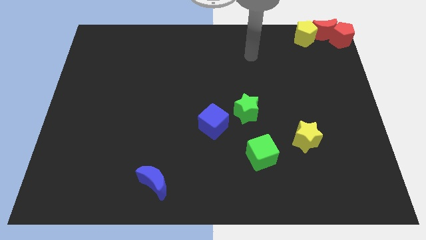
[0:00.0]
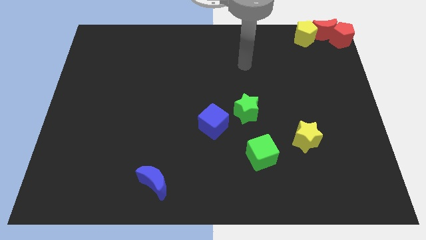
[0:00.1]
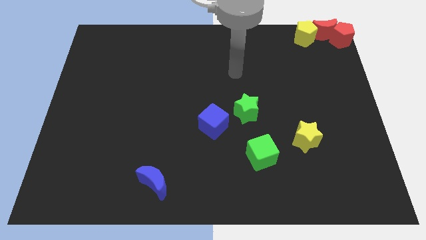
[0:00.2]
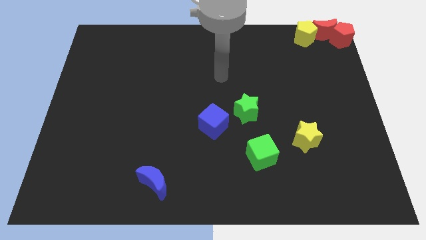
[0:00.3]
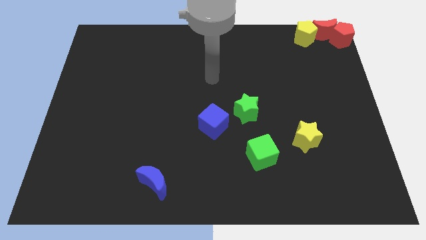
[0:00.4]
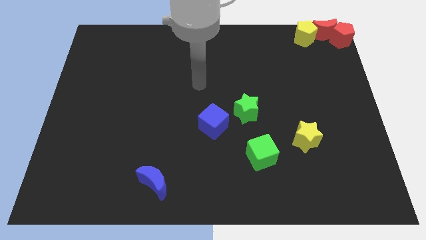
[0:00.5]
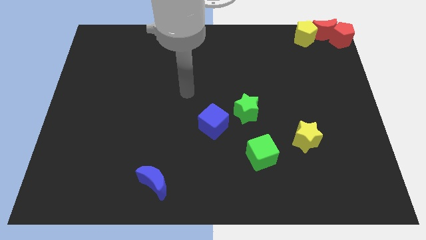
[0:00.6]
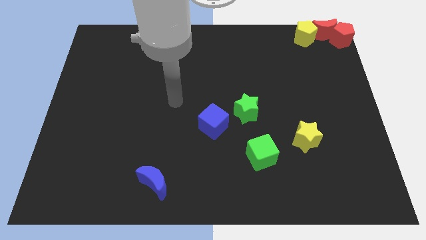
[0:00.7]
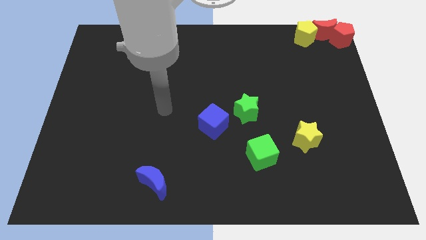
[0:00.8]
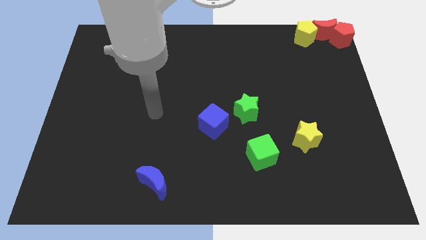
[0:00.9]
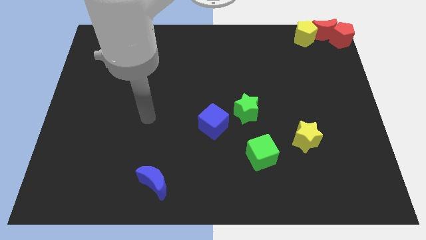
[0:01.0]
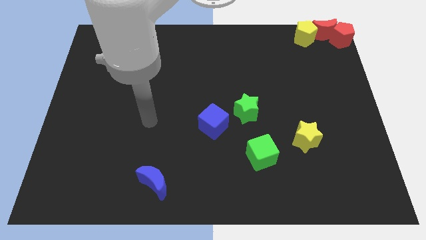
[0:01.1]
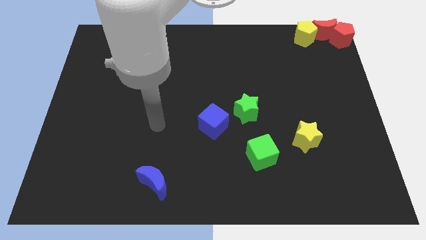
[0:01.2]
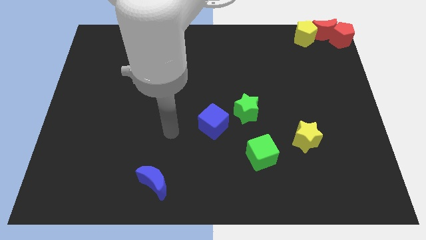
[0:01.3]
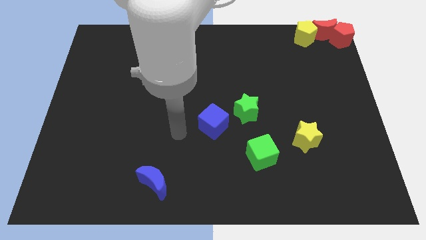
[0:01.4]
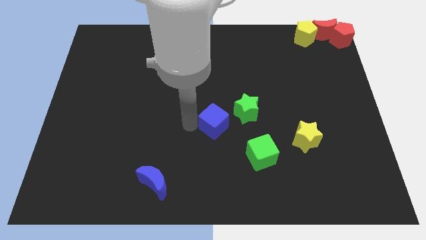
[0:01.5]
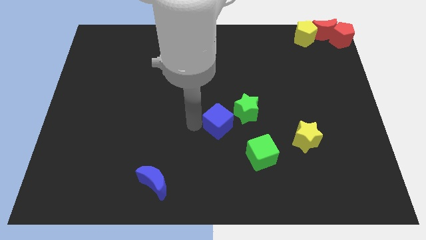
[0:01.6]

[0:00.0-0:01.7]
move the arm into the blue cube

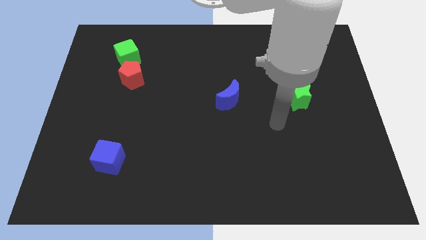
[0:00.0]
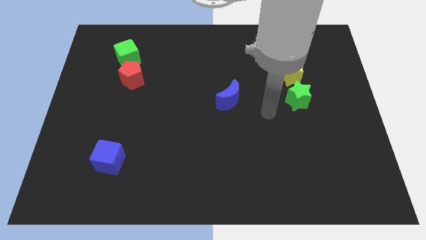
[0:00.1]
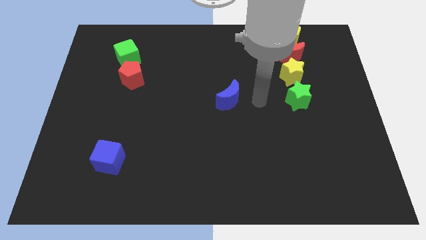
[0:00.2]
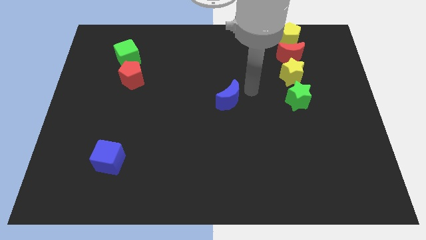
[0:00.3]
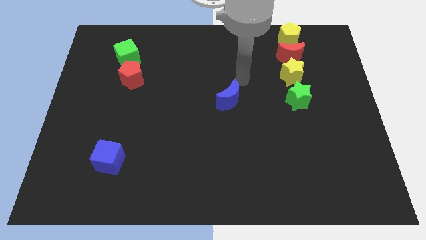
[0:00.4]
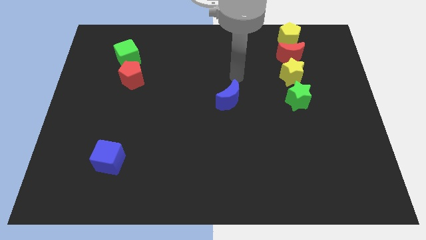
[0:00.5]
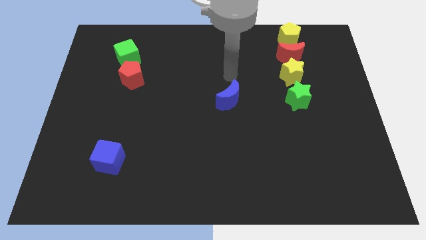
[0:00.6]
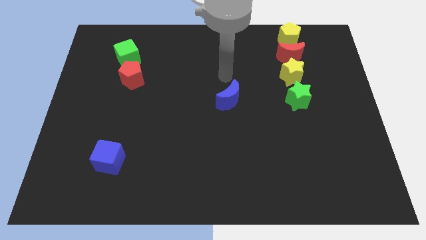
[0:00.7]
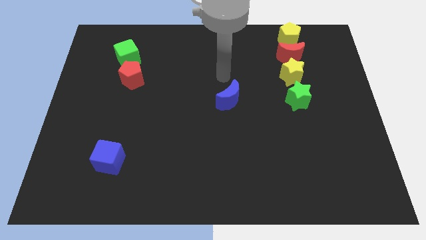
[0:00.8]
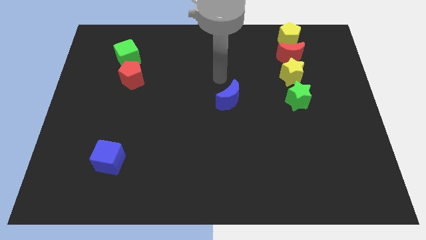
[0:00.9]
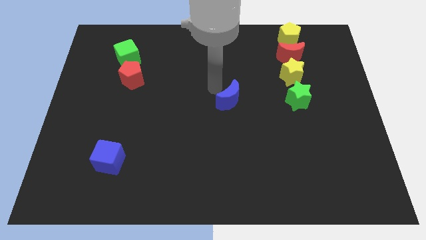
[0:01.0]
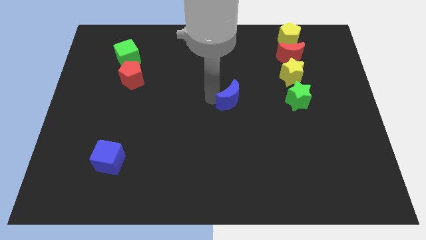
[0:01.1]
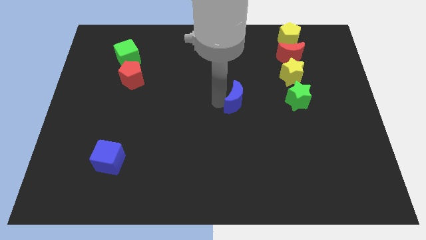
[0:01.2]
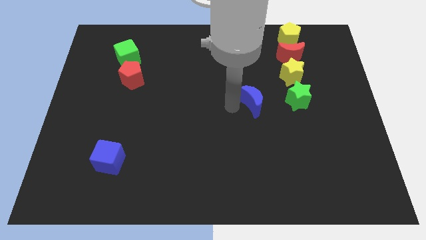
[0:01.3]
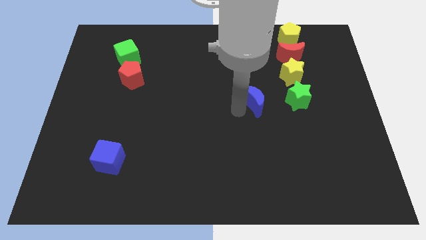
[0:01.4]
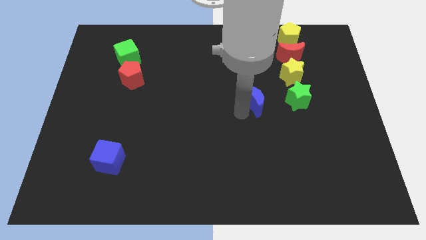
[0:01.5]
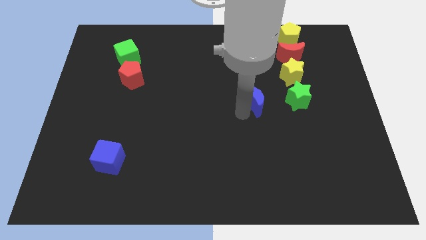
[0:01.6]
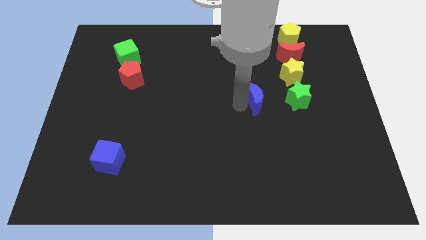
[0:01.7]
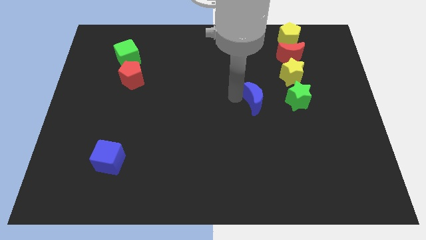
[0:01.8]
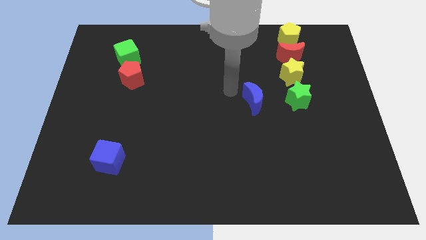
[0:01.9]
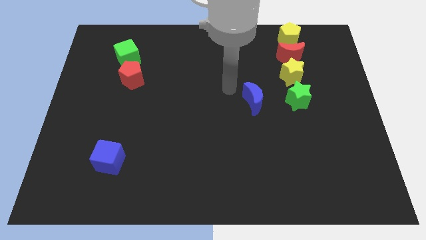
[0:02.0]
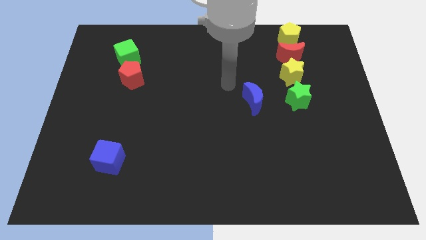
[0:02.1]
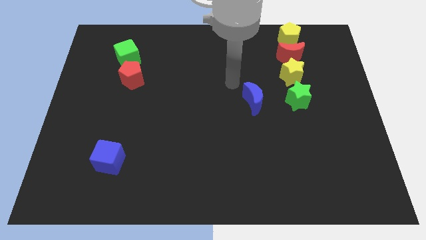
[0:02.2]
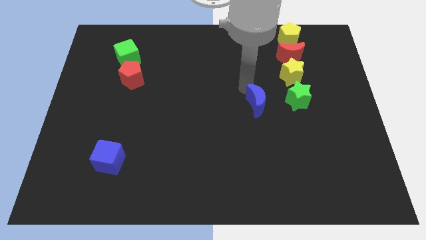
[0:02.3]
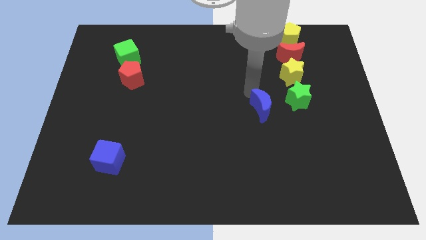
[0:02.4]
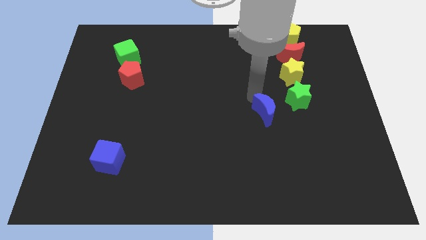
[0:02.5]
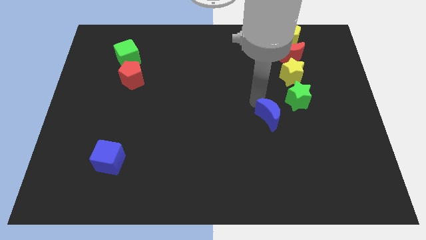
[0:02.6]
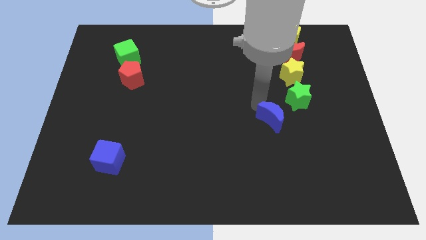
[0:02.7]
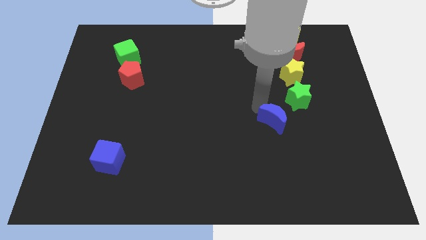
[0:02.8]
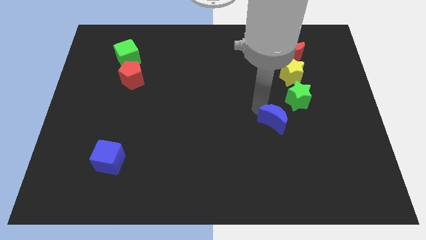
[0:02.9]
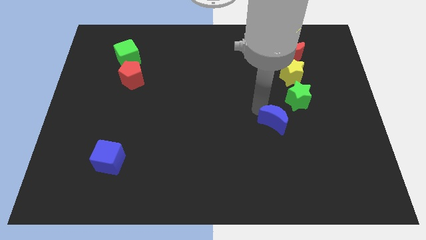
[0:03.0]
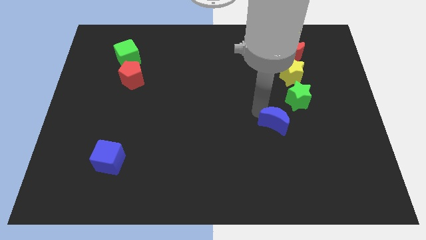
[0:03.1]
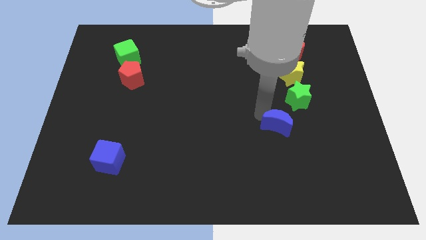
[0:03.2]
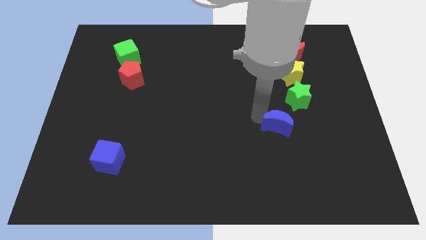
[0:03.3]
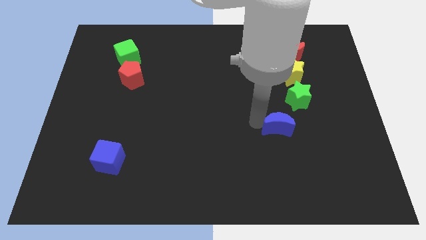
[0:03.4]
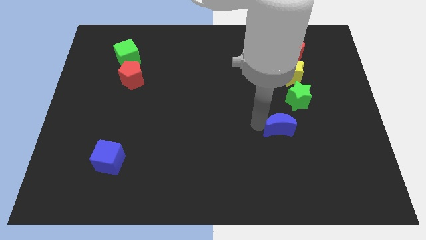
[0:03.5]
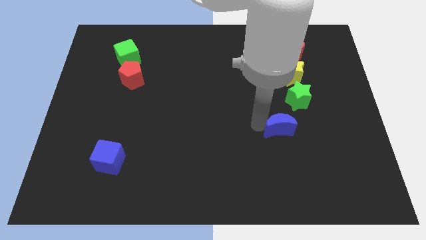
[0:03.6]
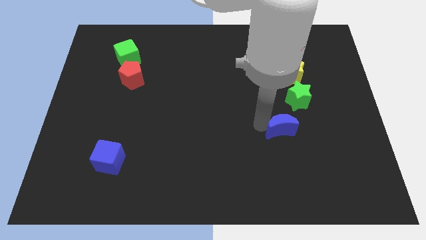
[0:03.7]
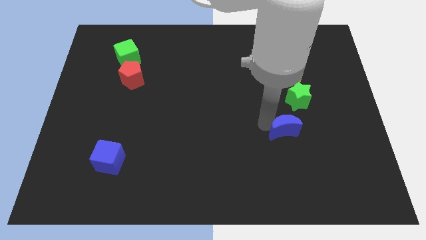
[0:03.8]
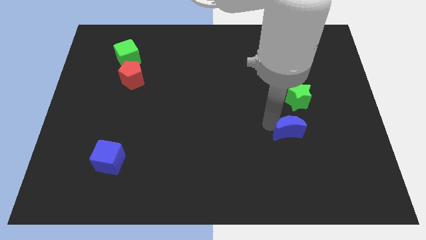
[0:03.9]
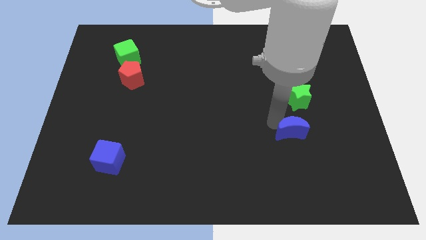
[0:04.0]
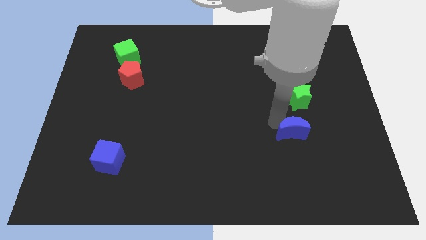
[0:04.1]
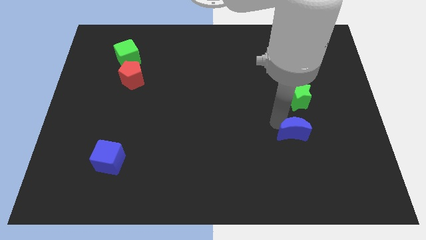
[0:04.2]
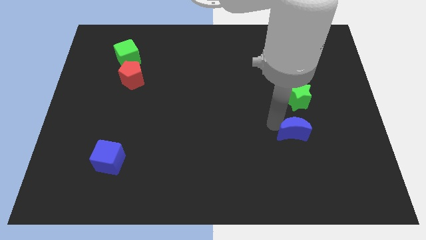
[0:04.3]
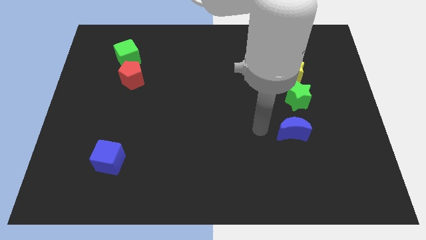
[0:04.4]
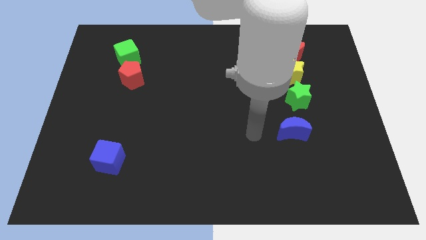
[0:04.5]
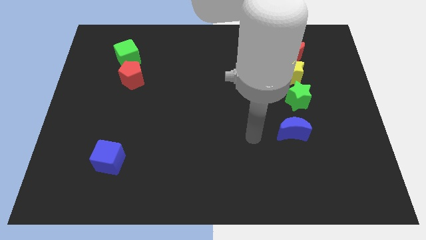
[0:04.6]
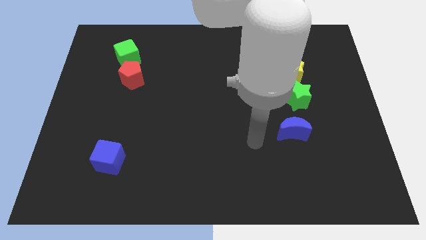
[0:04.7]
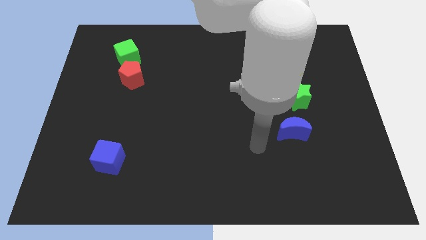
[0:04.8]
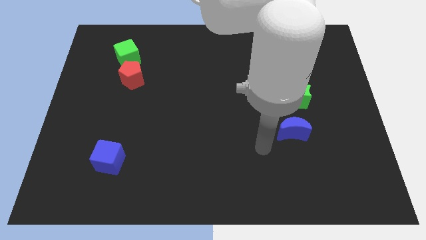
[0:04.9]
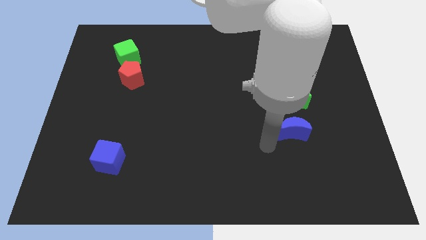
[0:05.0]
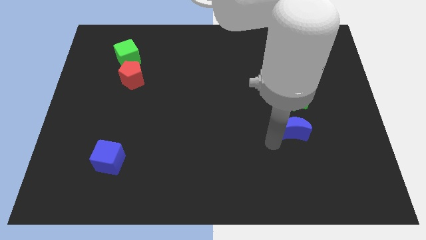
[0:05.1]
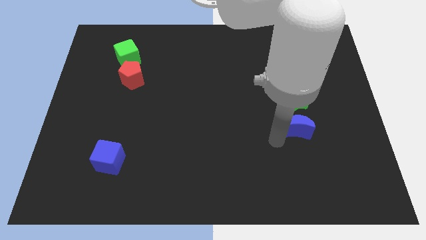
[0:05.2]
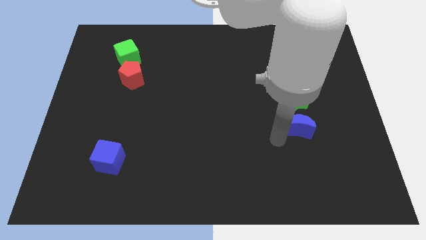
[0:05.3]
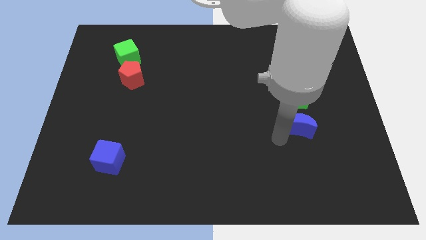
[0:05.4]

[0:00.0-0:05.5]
place the blue crescent below the green star

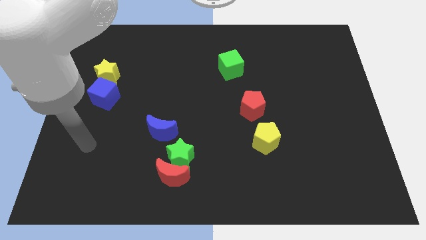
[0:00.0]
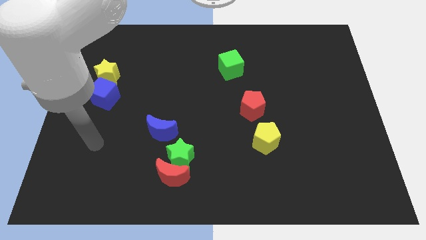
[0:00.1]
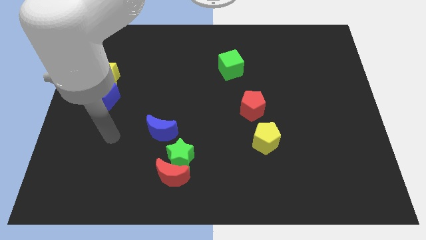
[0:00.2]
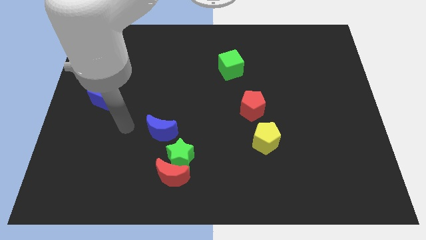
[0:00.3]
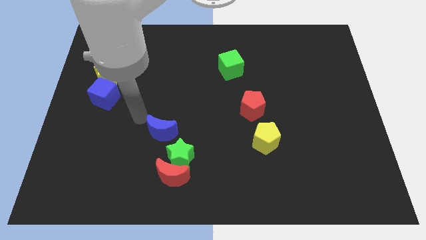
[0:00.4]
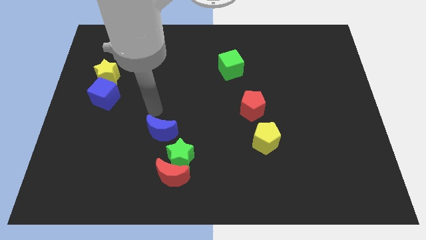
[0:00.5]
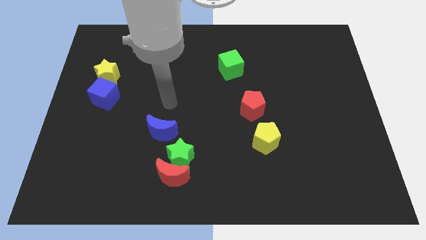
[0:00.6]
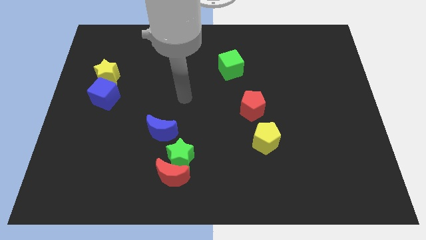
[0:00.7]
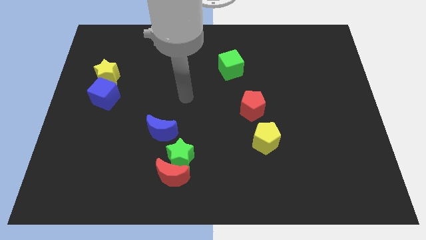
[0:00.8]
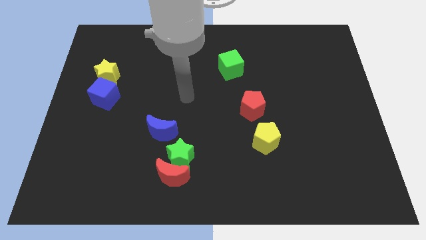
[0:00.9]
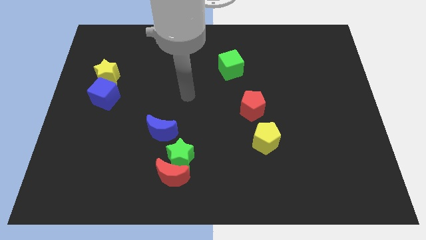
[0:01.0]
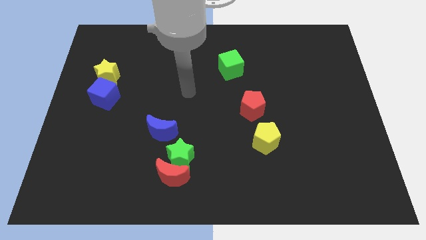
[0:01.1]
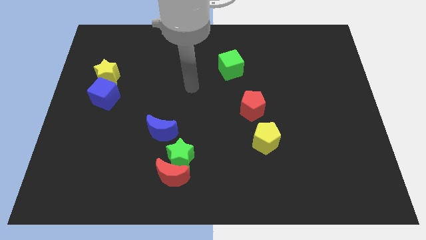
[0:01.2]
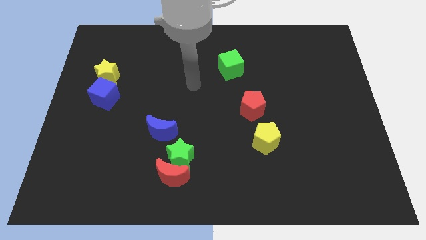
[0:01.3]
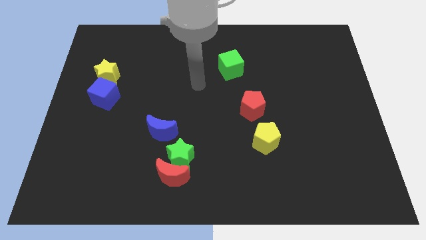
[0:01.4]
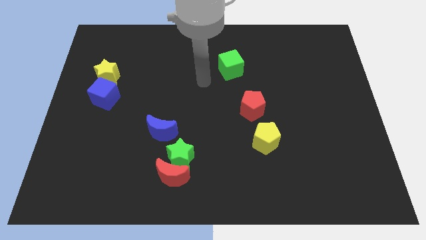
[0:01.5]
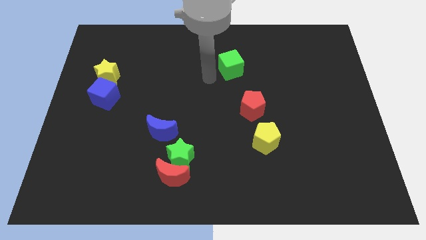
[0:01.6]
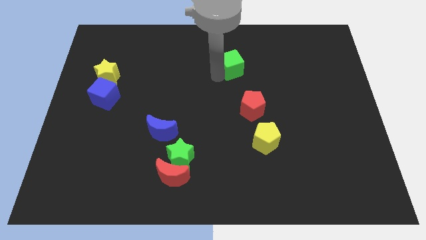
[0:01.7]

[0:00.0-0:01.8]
move your arm to the left of green cube
